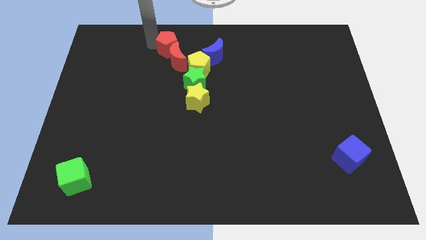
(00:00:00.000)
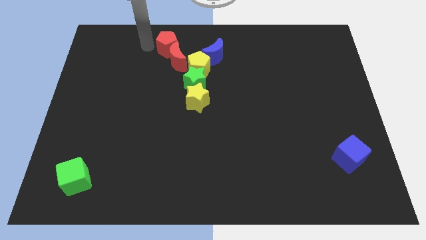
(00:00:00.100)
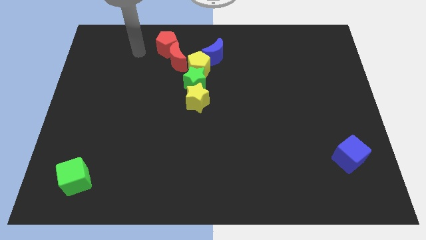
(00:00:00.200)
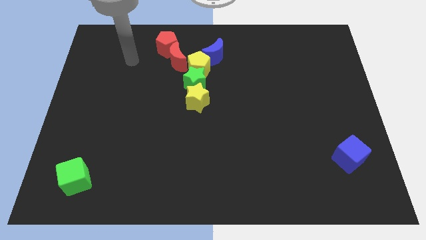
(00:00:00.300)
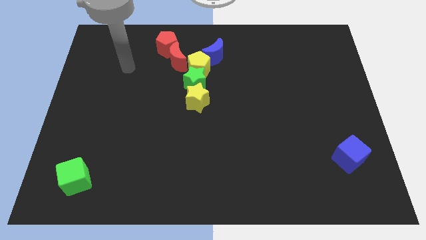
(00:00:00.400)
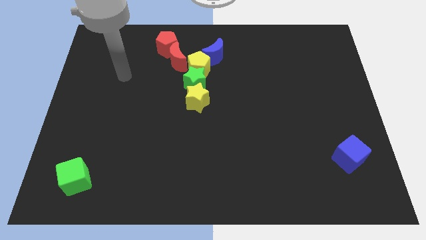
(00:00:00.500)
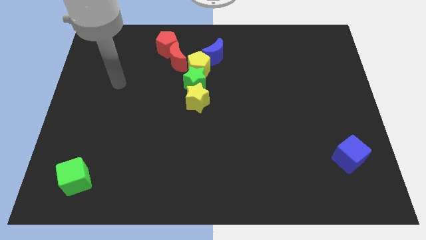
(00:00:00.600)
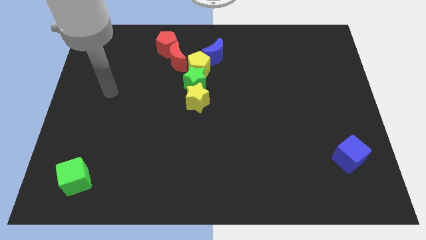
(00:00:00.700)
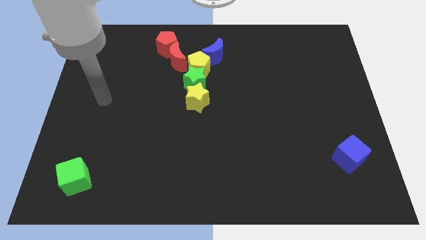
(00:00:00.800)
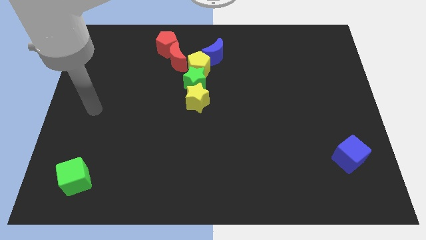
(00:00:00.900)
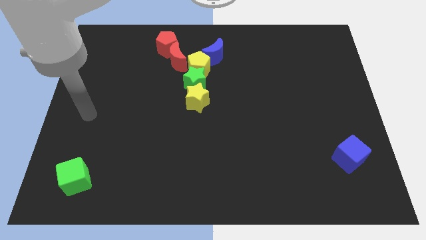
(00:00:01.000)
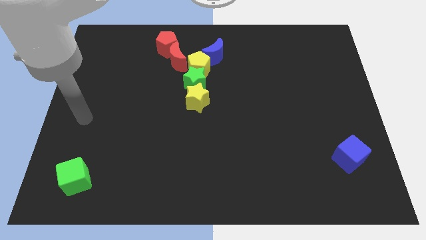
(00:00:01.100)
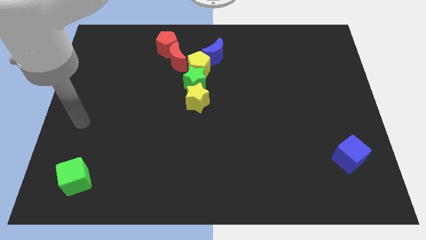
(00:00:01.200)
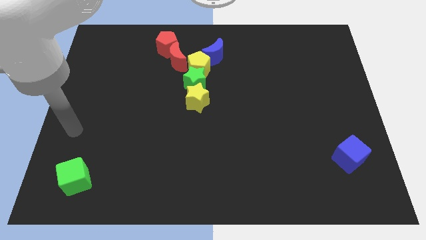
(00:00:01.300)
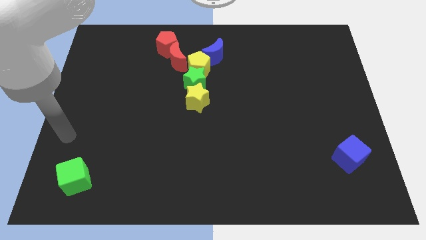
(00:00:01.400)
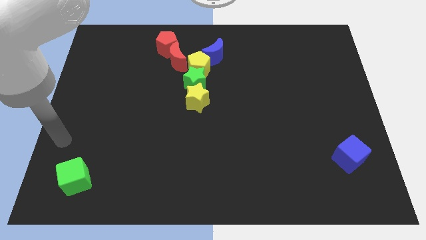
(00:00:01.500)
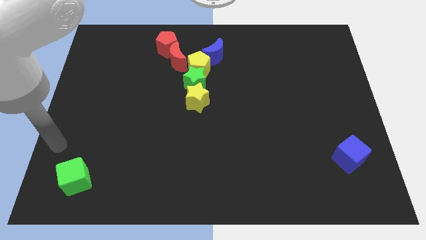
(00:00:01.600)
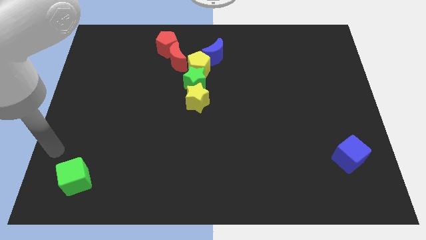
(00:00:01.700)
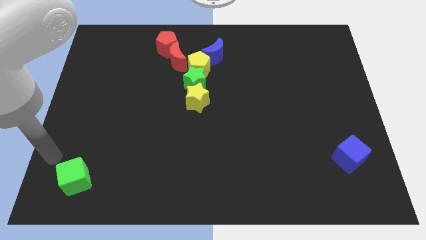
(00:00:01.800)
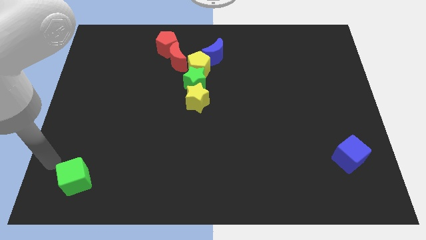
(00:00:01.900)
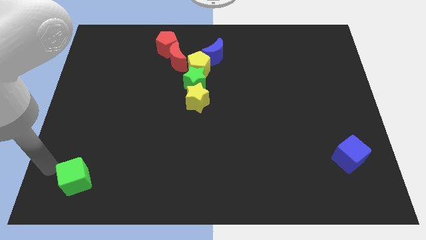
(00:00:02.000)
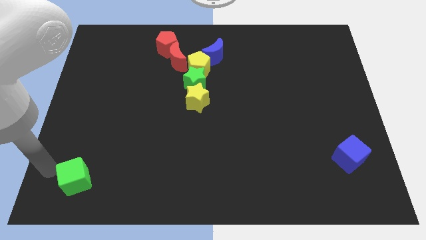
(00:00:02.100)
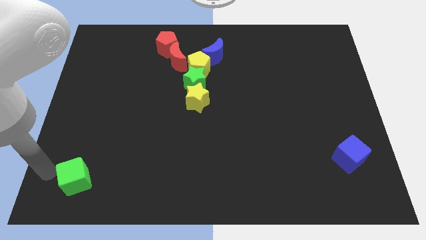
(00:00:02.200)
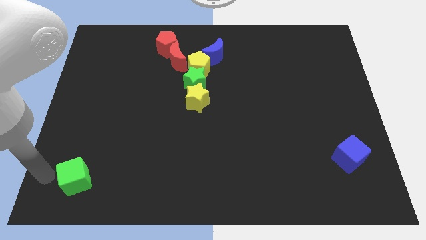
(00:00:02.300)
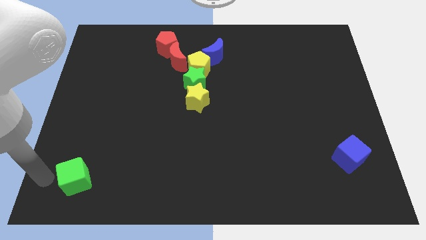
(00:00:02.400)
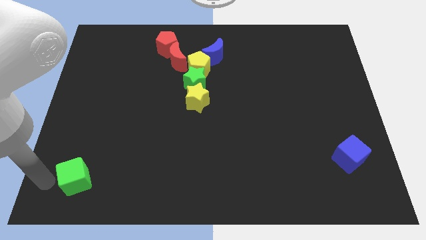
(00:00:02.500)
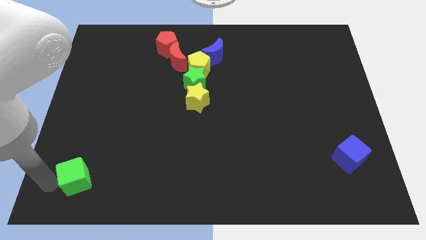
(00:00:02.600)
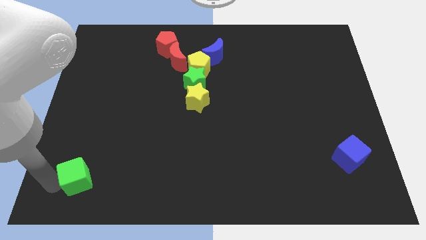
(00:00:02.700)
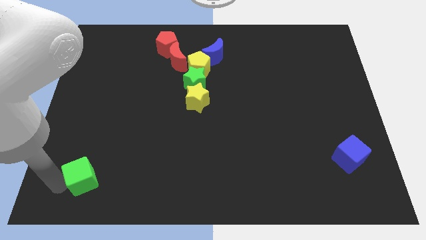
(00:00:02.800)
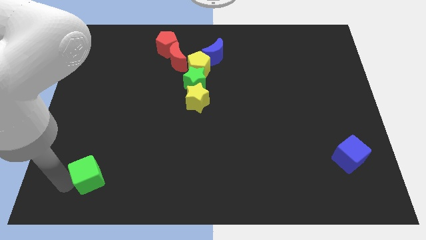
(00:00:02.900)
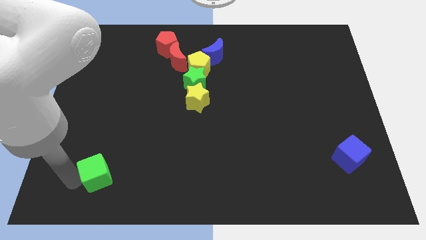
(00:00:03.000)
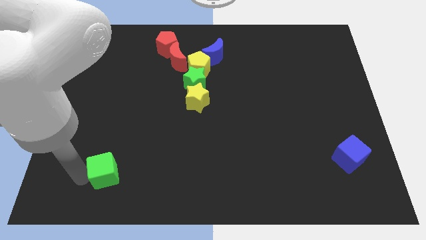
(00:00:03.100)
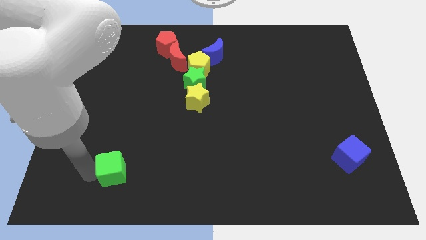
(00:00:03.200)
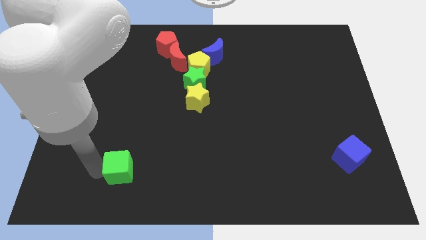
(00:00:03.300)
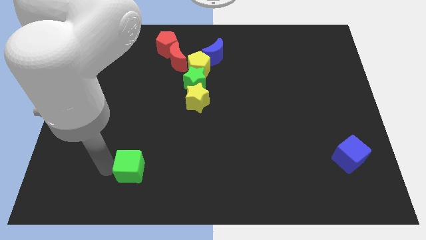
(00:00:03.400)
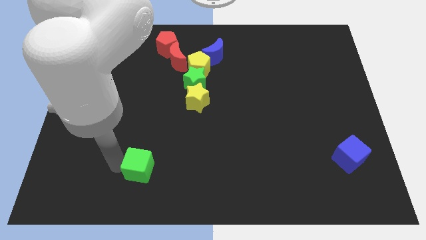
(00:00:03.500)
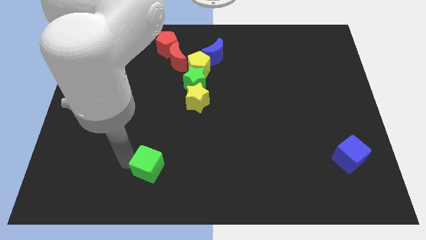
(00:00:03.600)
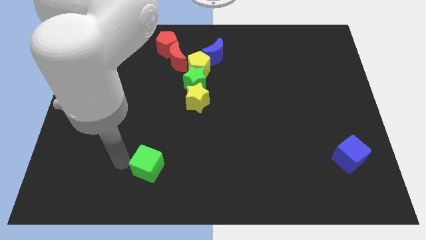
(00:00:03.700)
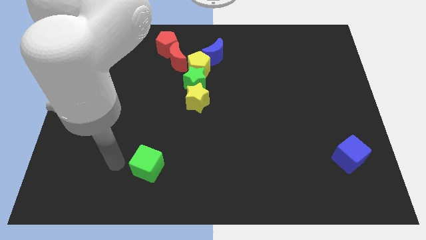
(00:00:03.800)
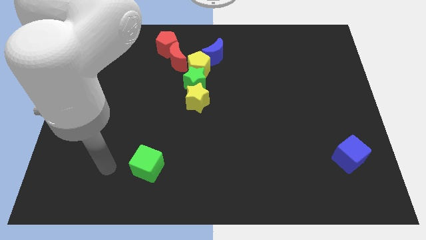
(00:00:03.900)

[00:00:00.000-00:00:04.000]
move the green cube on the right side of the board

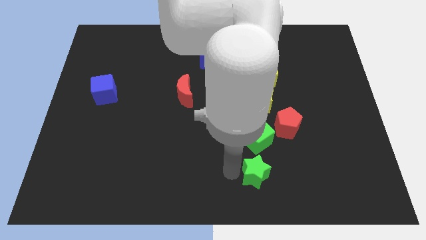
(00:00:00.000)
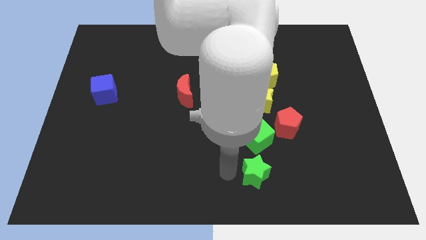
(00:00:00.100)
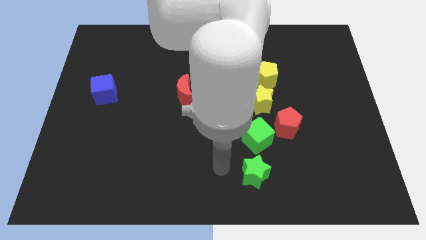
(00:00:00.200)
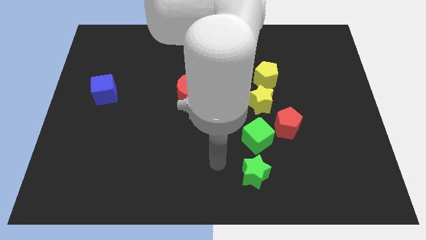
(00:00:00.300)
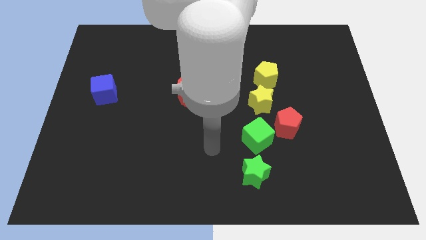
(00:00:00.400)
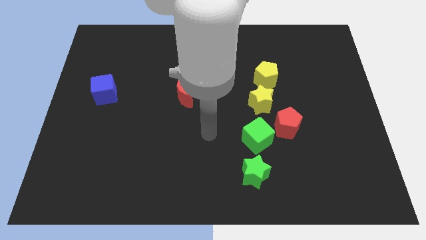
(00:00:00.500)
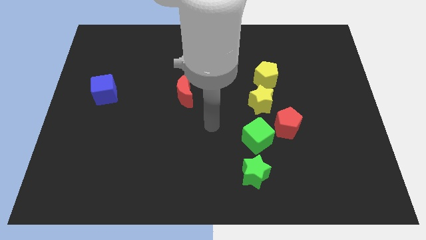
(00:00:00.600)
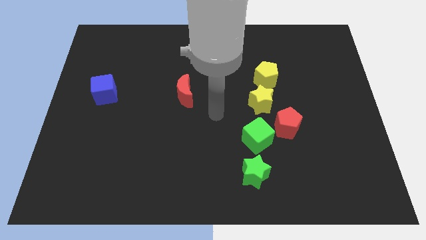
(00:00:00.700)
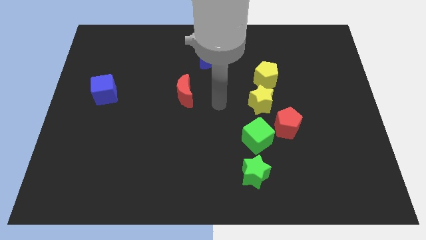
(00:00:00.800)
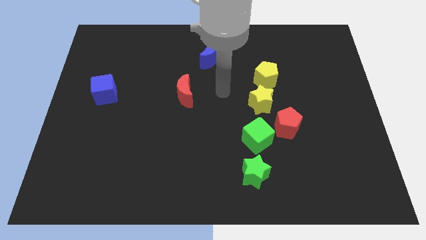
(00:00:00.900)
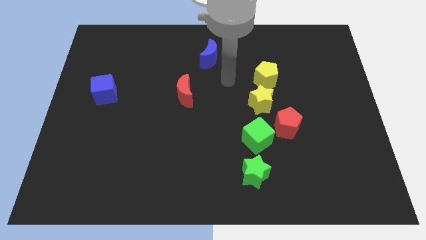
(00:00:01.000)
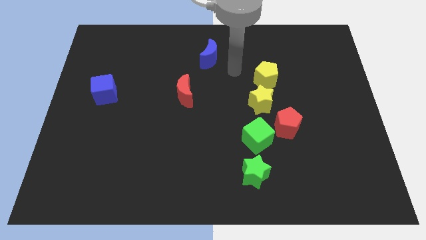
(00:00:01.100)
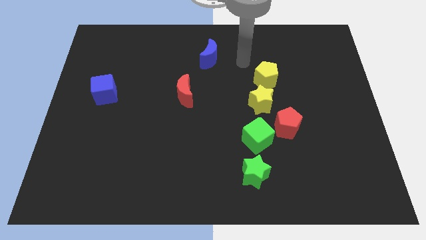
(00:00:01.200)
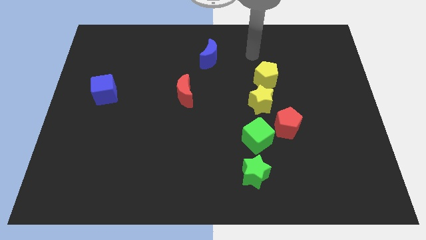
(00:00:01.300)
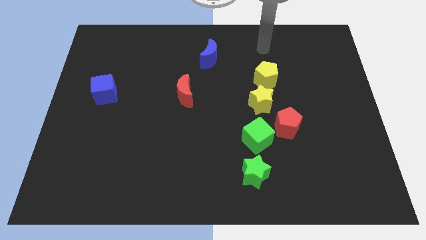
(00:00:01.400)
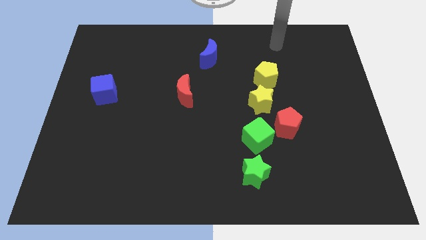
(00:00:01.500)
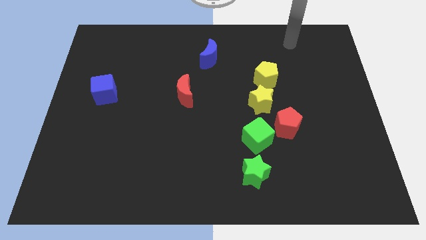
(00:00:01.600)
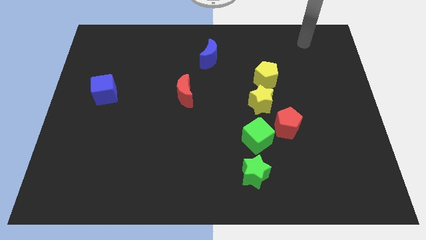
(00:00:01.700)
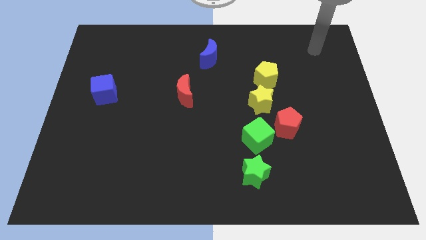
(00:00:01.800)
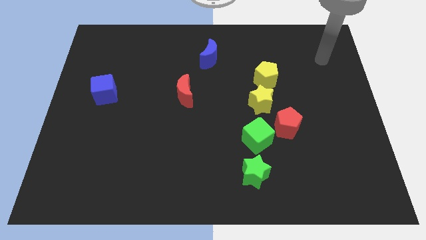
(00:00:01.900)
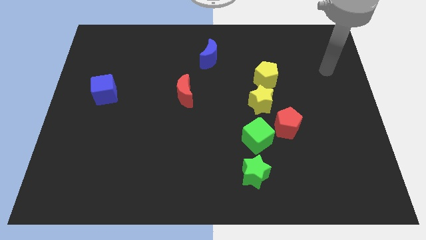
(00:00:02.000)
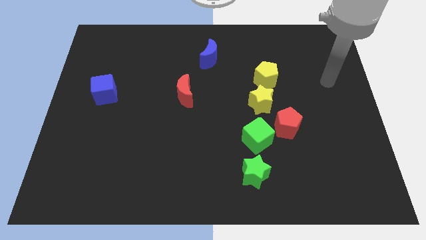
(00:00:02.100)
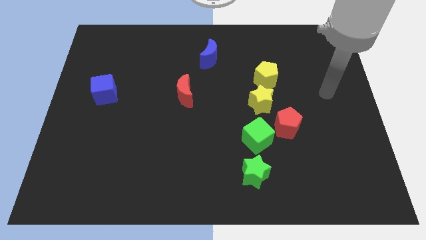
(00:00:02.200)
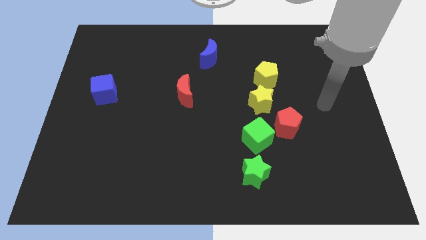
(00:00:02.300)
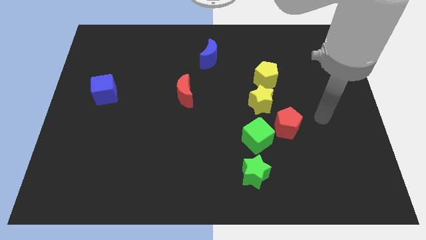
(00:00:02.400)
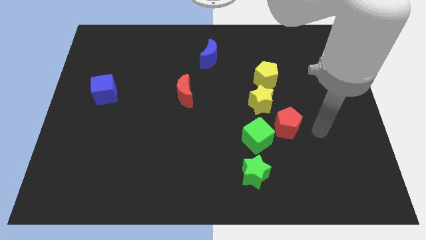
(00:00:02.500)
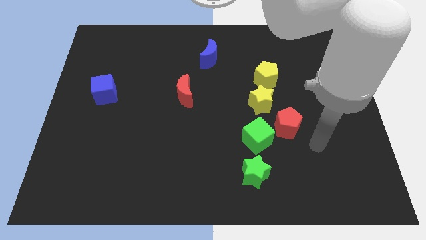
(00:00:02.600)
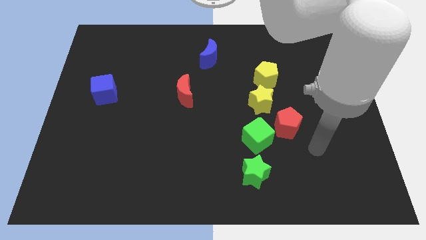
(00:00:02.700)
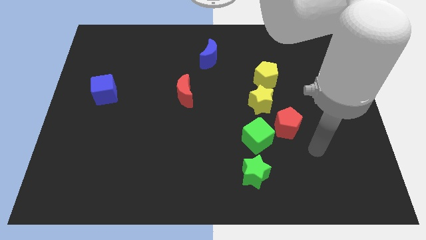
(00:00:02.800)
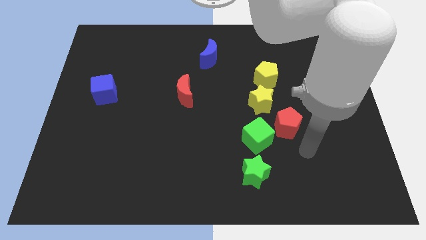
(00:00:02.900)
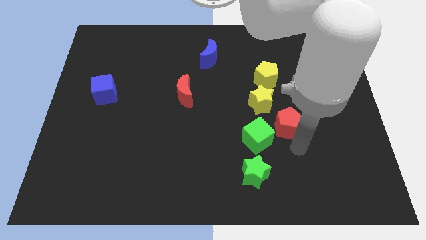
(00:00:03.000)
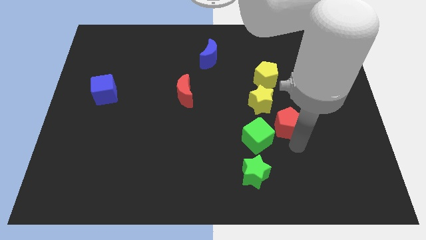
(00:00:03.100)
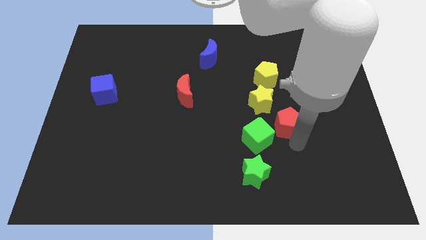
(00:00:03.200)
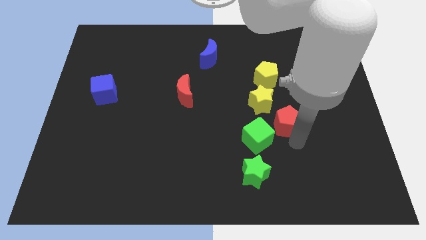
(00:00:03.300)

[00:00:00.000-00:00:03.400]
move your arm to the right of the red pentagon

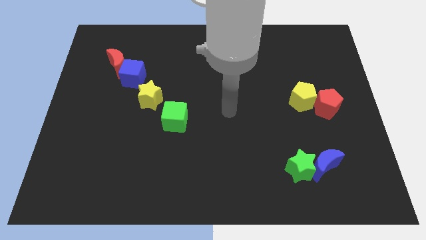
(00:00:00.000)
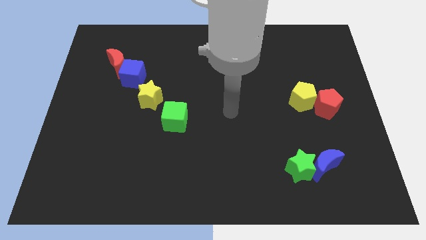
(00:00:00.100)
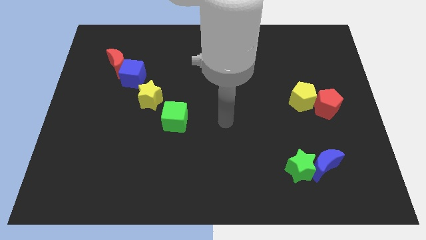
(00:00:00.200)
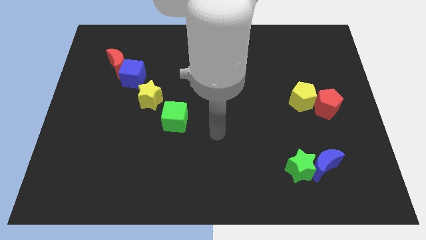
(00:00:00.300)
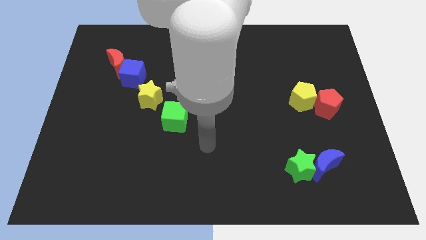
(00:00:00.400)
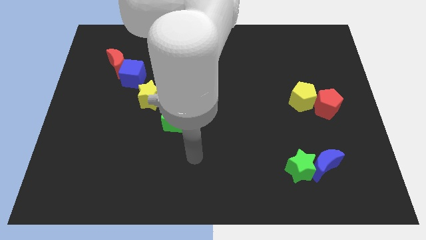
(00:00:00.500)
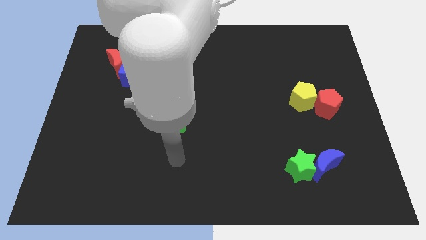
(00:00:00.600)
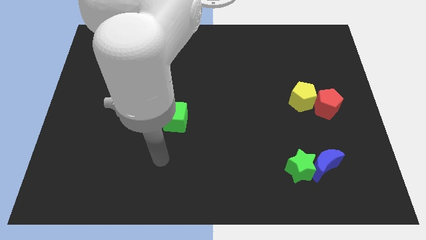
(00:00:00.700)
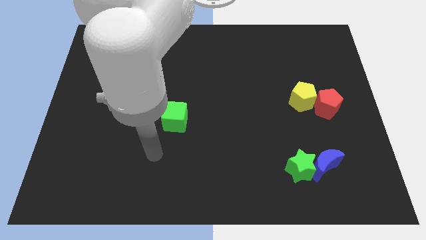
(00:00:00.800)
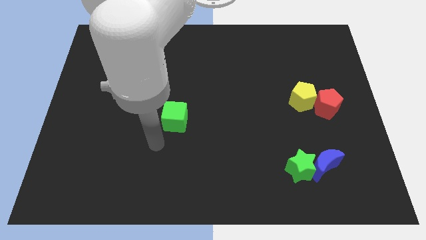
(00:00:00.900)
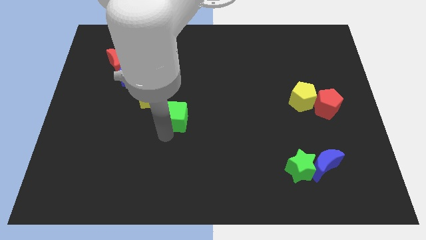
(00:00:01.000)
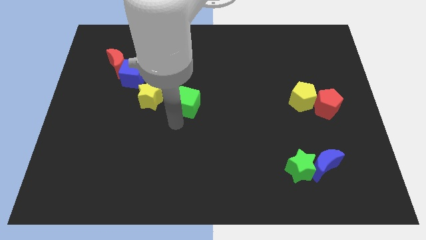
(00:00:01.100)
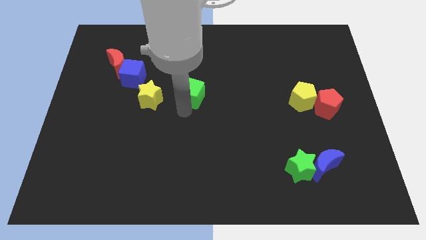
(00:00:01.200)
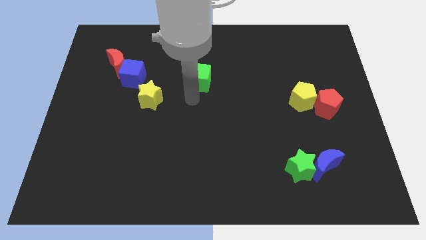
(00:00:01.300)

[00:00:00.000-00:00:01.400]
put the green cube right to the yellow star
